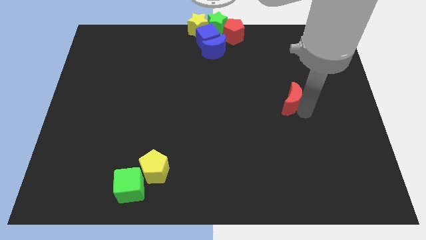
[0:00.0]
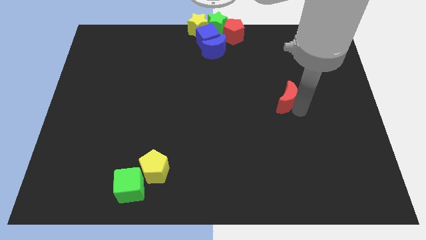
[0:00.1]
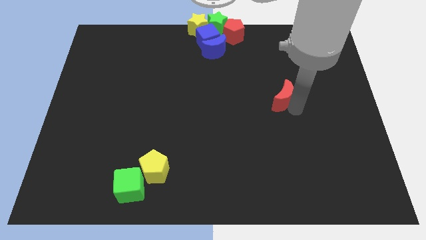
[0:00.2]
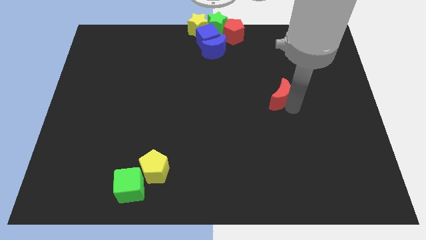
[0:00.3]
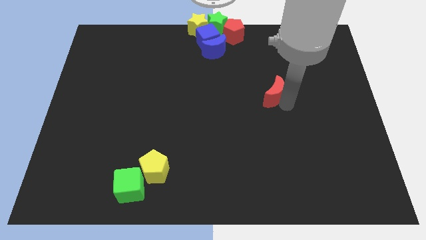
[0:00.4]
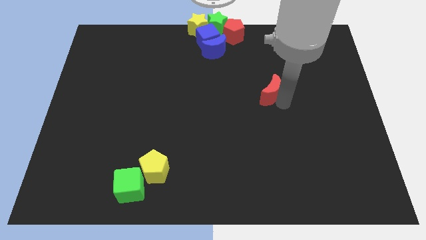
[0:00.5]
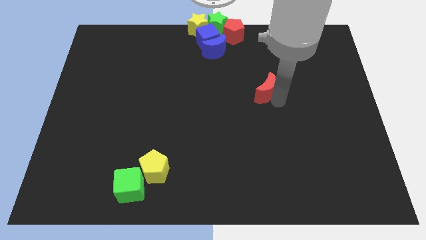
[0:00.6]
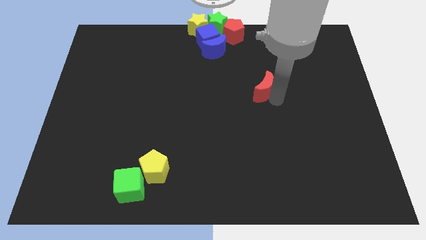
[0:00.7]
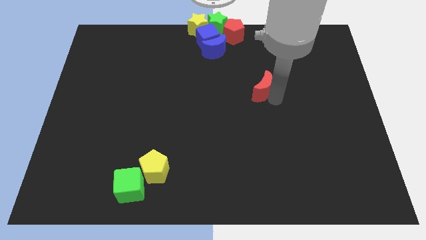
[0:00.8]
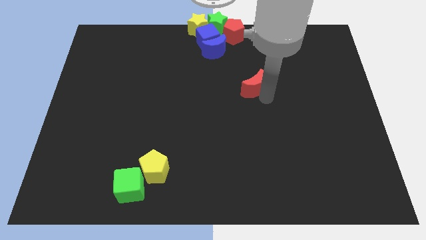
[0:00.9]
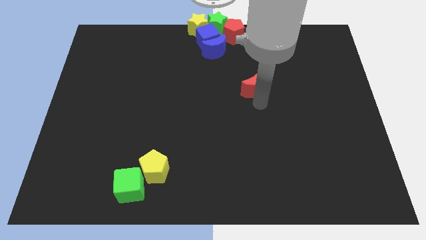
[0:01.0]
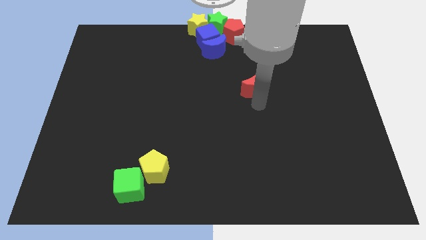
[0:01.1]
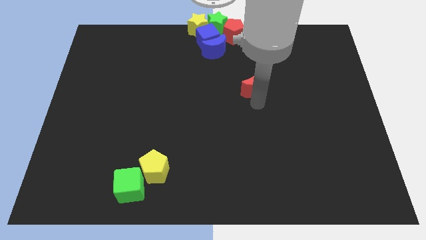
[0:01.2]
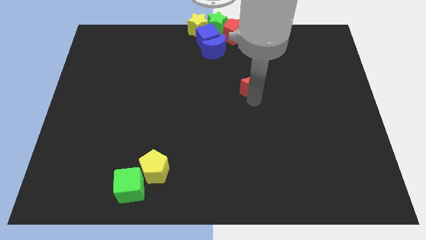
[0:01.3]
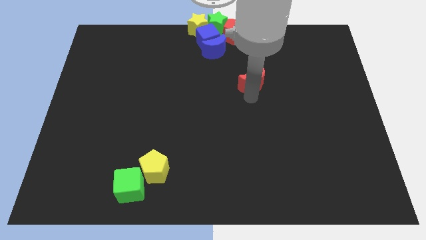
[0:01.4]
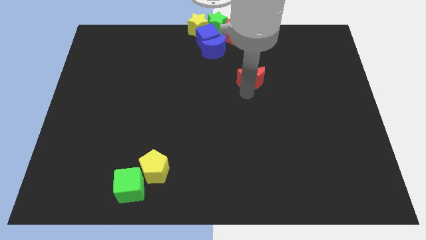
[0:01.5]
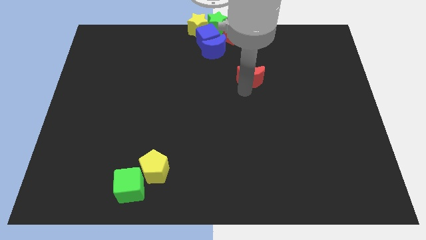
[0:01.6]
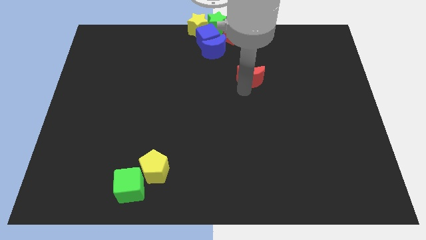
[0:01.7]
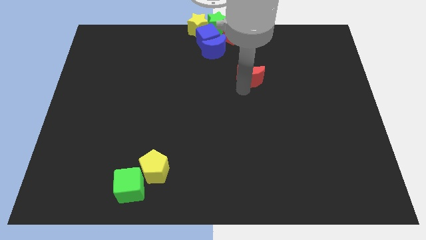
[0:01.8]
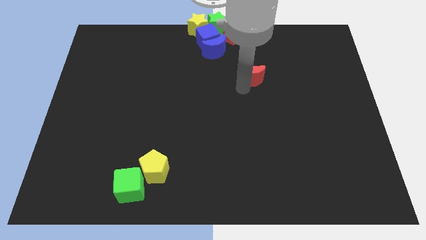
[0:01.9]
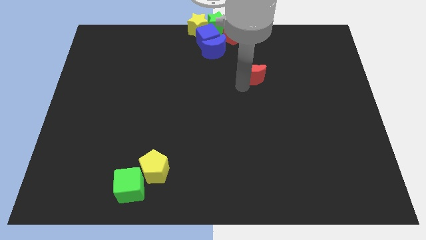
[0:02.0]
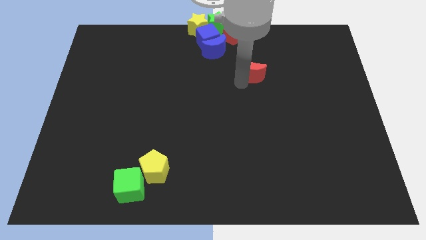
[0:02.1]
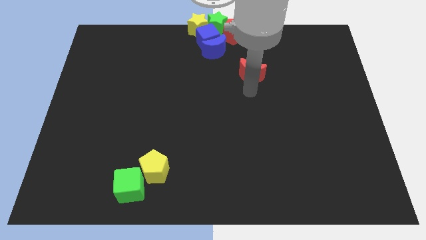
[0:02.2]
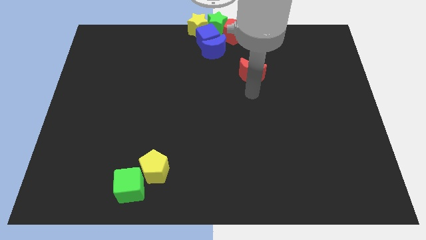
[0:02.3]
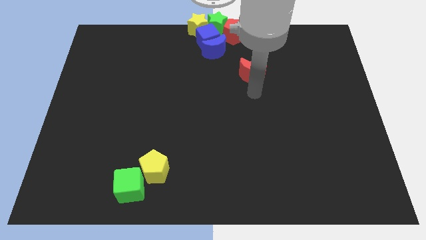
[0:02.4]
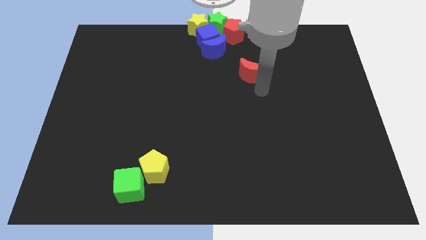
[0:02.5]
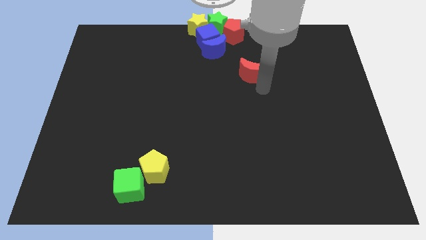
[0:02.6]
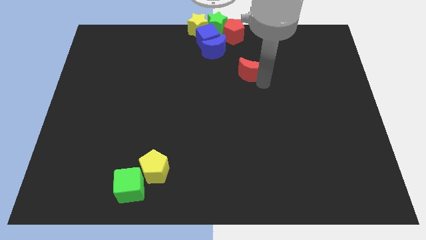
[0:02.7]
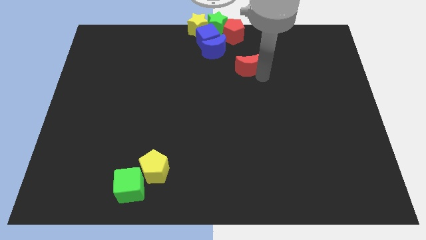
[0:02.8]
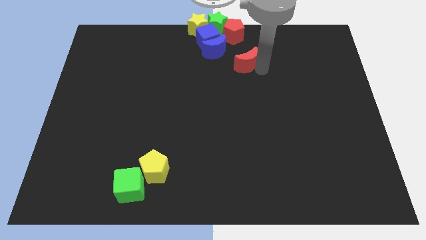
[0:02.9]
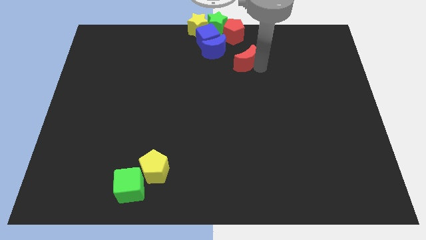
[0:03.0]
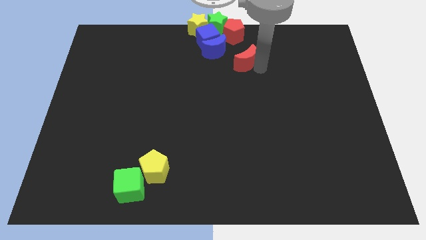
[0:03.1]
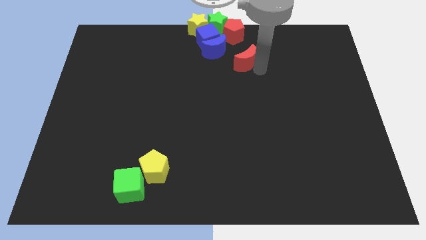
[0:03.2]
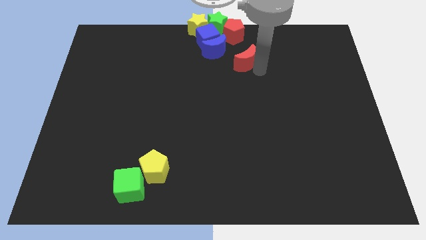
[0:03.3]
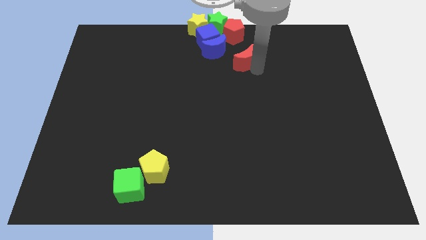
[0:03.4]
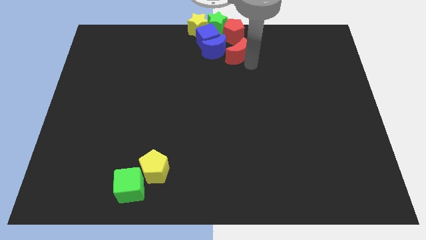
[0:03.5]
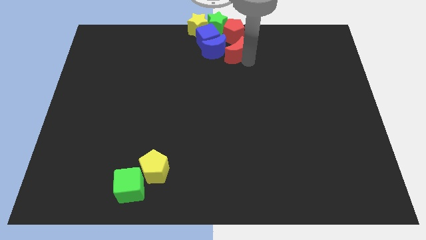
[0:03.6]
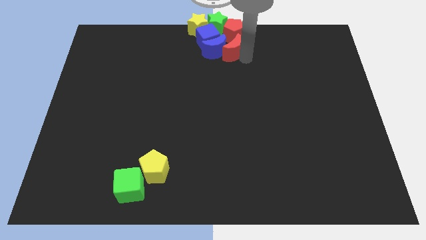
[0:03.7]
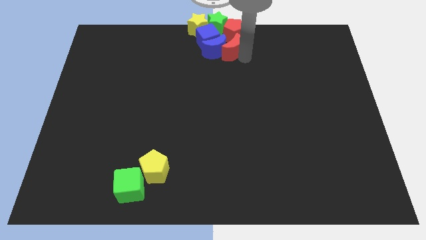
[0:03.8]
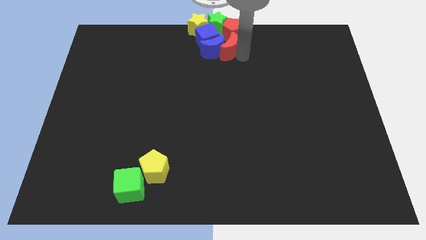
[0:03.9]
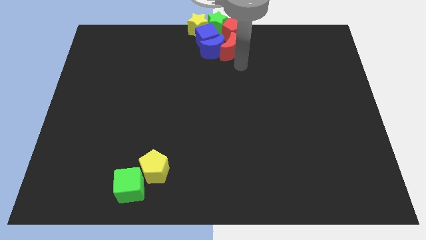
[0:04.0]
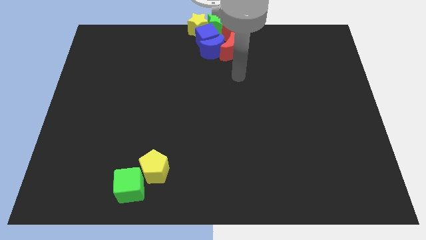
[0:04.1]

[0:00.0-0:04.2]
move the red crescent to the bottom right side of the blue crescent

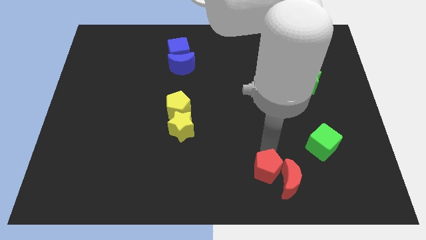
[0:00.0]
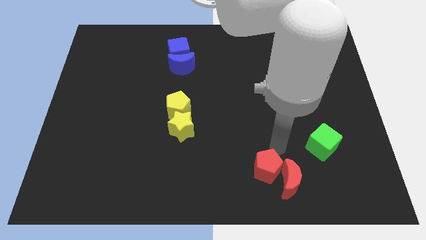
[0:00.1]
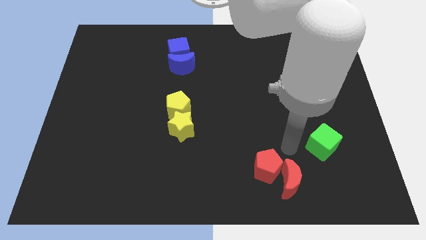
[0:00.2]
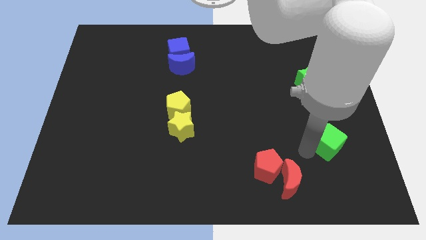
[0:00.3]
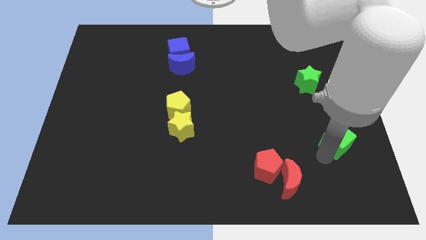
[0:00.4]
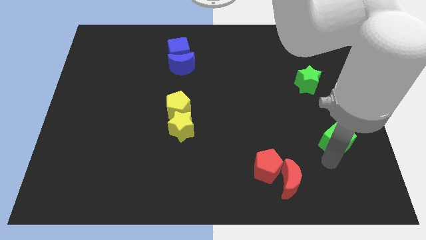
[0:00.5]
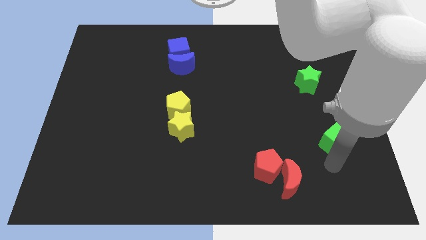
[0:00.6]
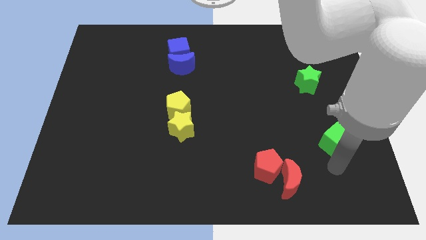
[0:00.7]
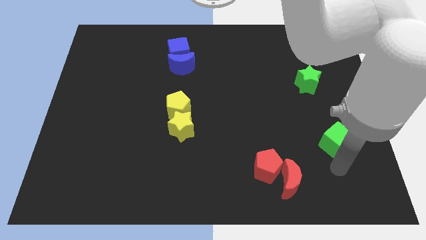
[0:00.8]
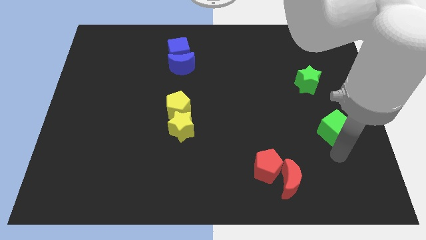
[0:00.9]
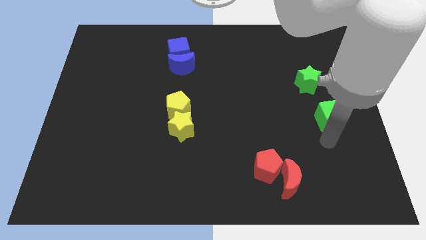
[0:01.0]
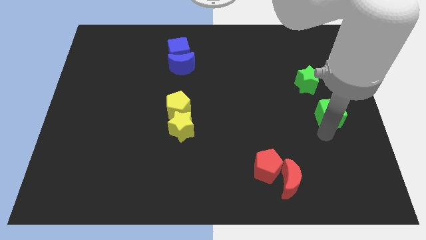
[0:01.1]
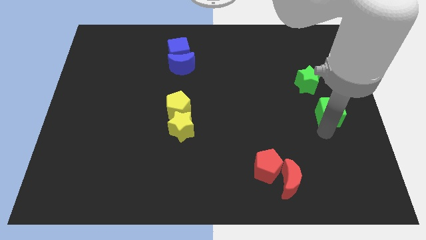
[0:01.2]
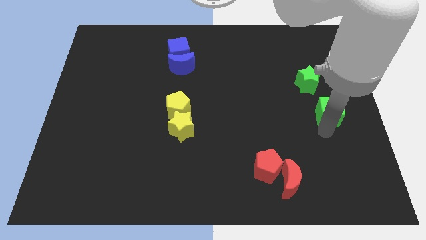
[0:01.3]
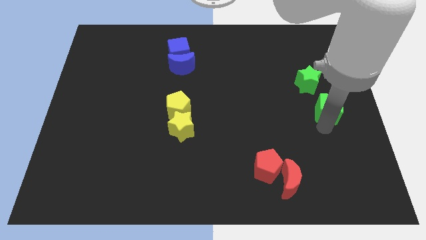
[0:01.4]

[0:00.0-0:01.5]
move the green cube to the top of the board

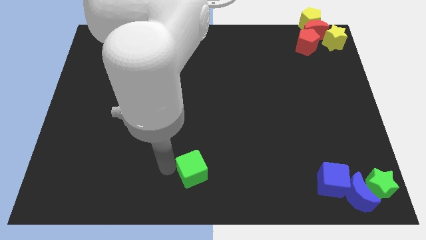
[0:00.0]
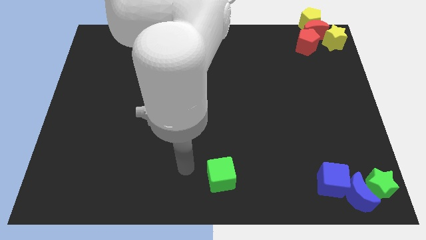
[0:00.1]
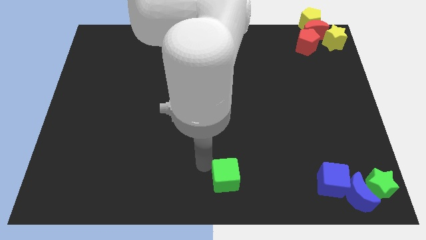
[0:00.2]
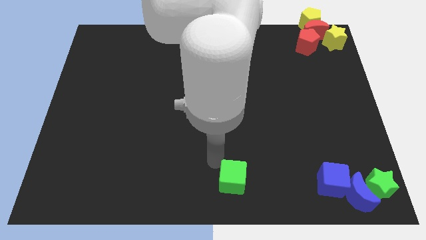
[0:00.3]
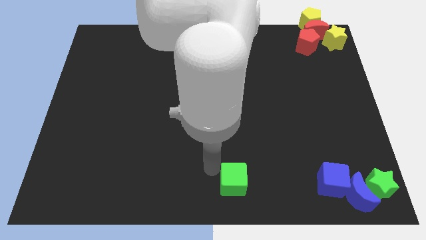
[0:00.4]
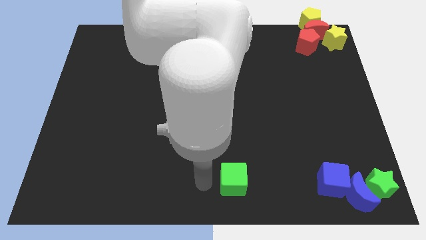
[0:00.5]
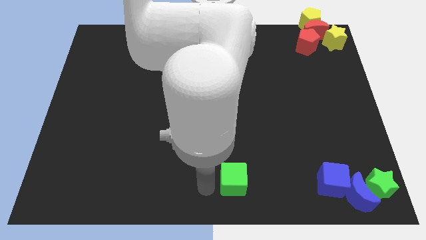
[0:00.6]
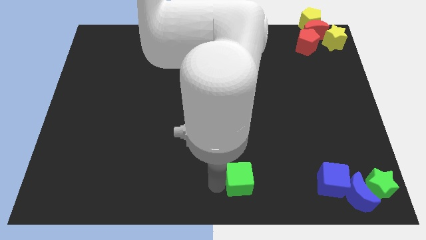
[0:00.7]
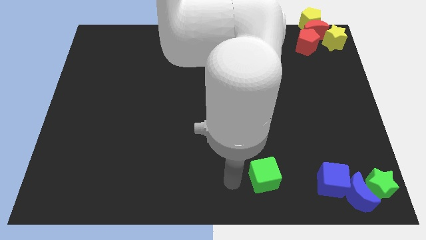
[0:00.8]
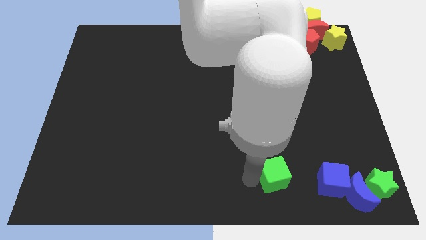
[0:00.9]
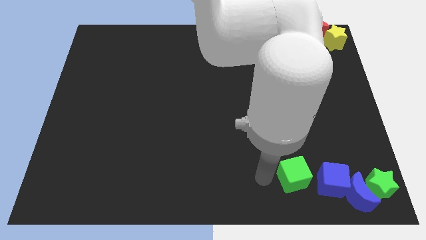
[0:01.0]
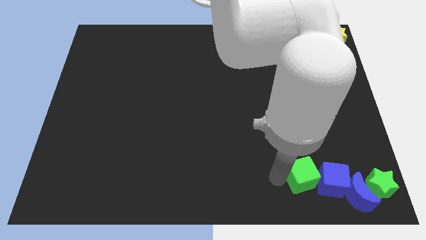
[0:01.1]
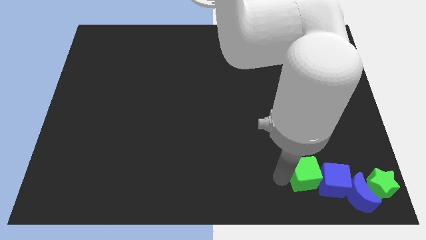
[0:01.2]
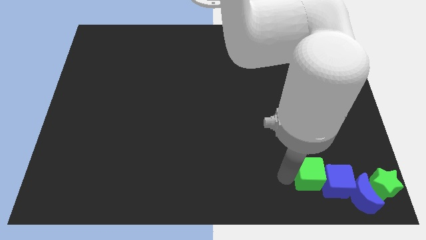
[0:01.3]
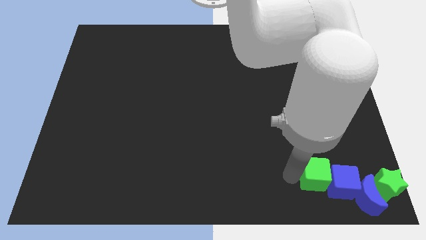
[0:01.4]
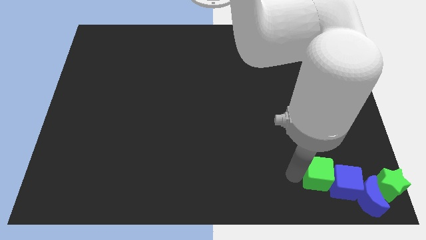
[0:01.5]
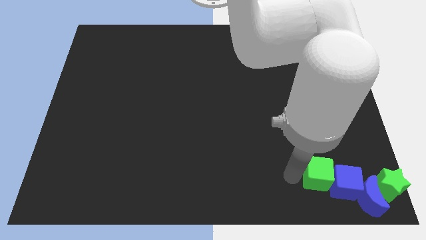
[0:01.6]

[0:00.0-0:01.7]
push the green cube close to blue cube

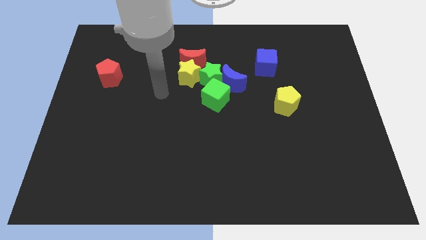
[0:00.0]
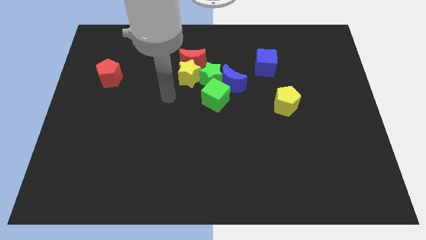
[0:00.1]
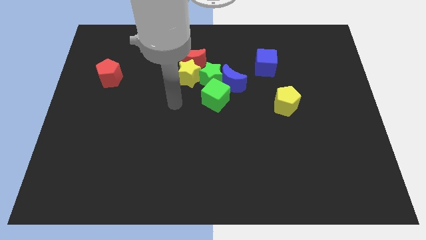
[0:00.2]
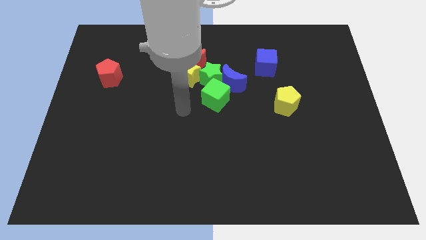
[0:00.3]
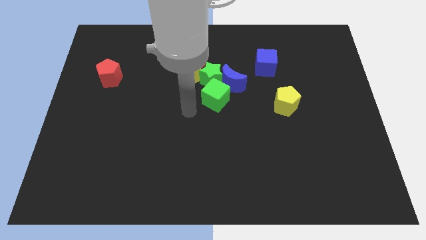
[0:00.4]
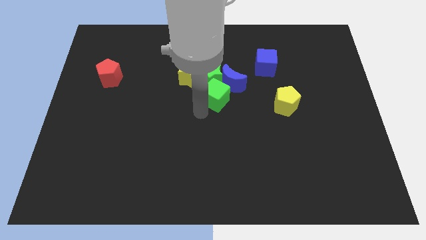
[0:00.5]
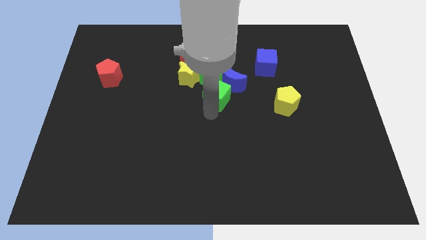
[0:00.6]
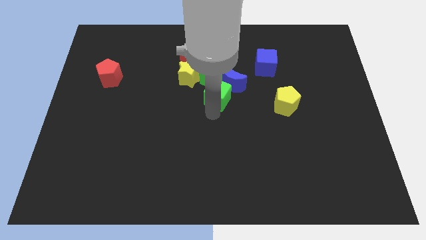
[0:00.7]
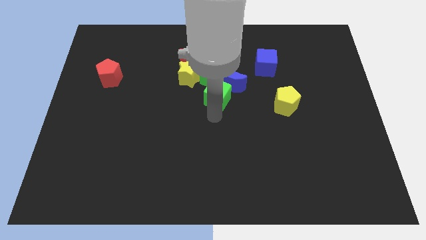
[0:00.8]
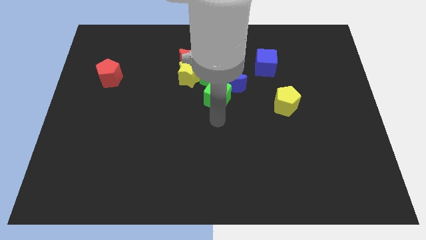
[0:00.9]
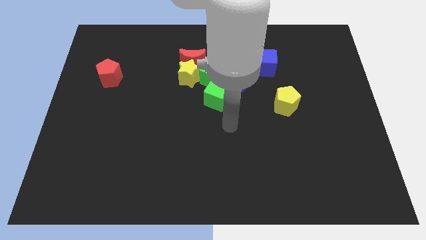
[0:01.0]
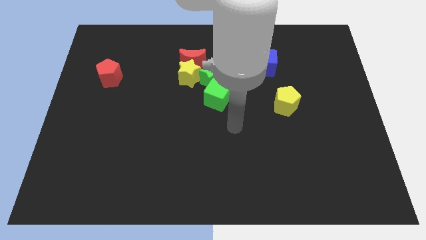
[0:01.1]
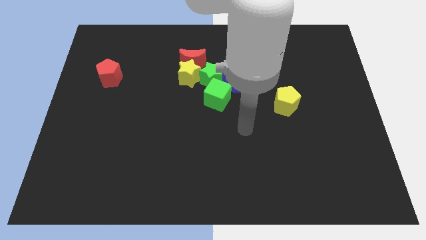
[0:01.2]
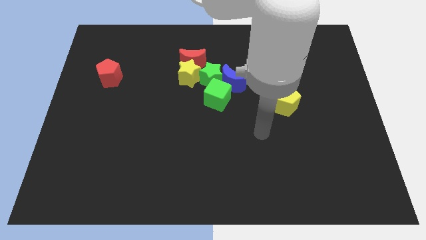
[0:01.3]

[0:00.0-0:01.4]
slightly move the green cube
